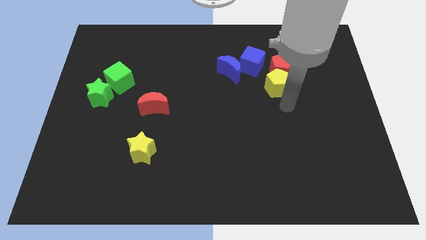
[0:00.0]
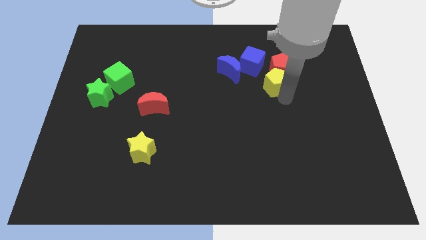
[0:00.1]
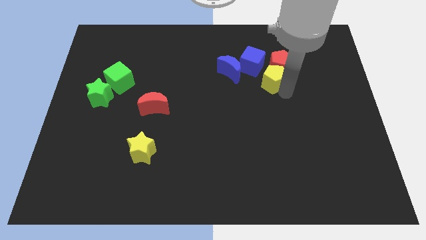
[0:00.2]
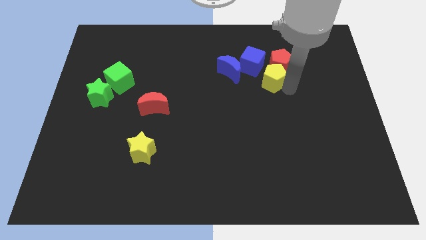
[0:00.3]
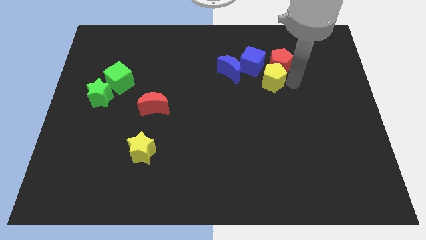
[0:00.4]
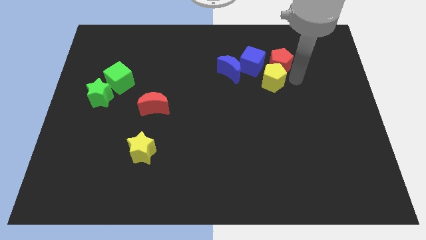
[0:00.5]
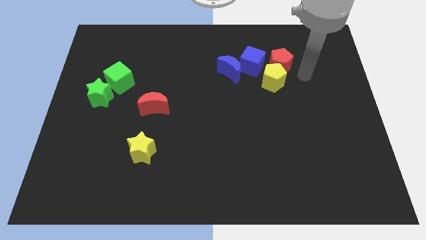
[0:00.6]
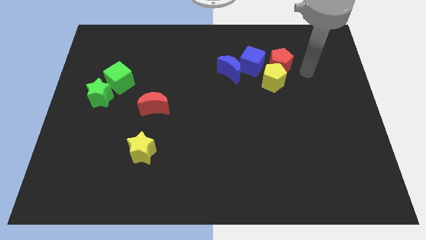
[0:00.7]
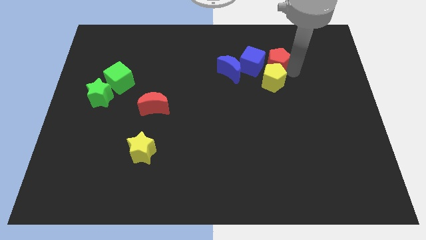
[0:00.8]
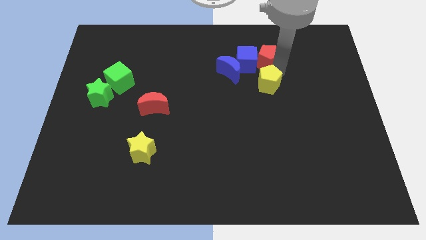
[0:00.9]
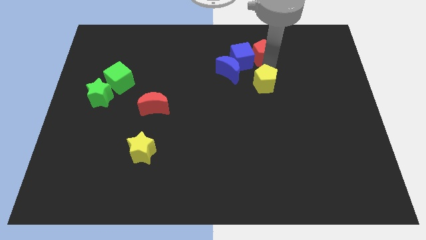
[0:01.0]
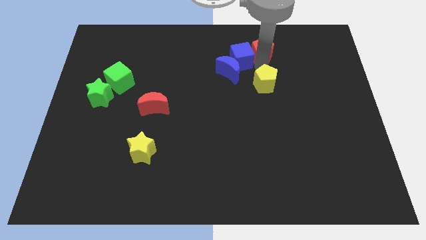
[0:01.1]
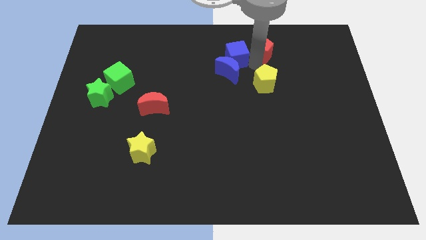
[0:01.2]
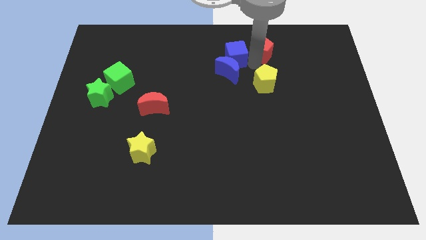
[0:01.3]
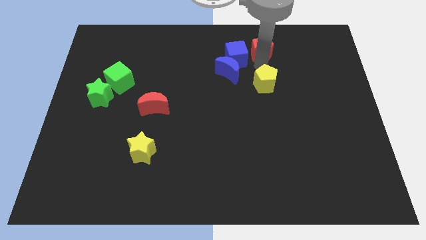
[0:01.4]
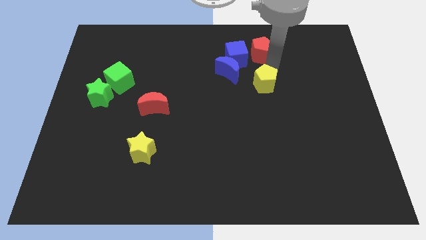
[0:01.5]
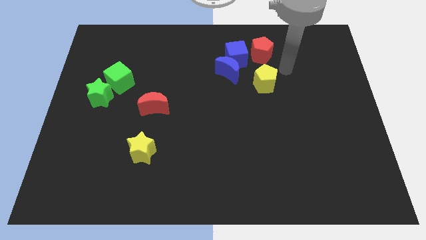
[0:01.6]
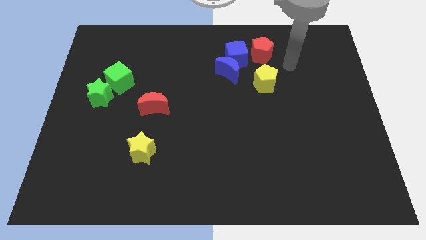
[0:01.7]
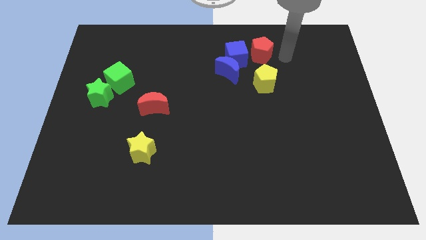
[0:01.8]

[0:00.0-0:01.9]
separate the red pentagon and blue cube

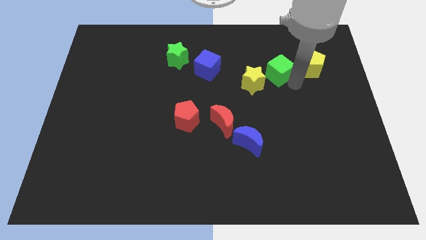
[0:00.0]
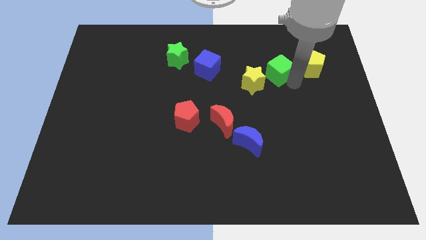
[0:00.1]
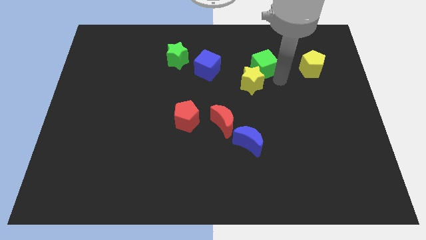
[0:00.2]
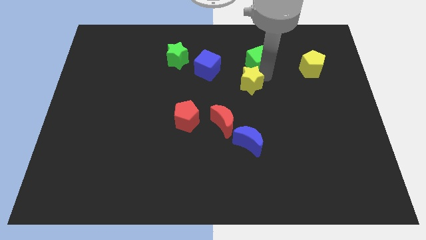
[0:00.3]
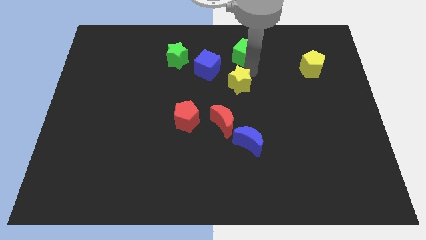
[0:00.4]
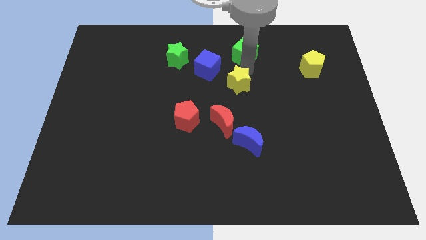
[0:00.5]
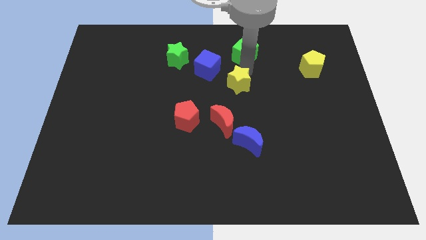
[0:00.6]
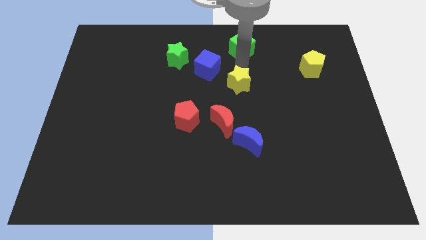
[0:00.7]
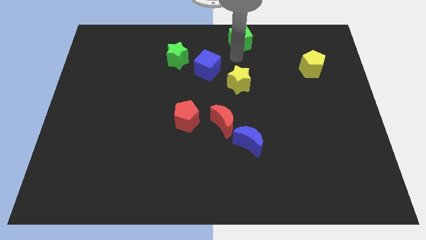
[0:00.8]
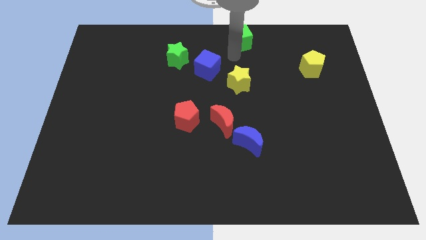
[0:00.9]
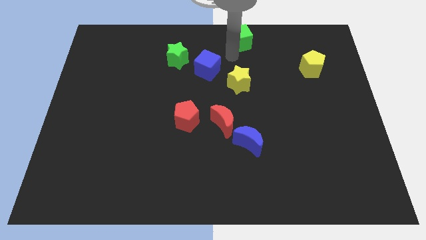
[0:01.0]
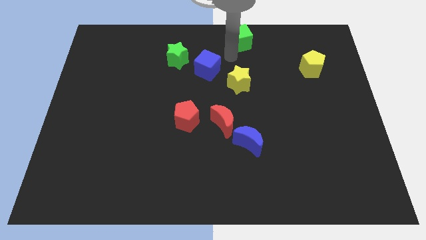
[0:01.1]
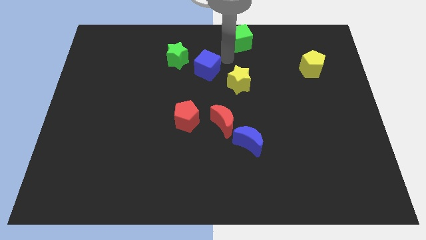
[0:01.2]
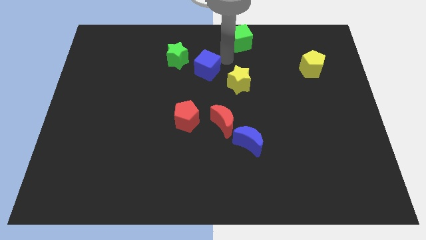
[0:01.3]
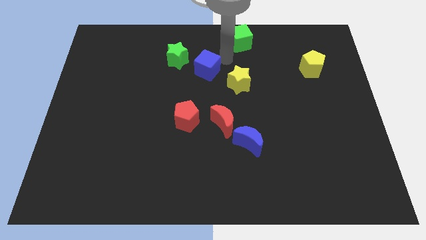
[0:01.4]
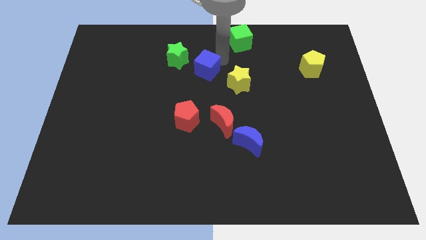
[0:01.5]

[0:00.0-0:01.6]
separate green cube towards top center of the board

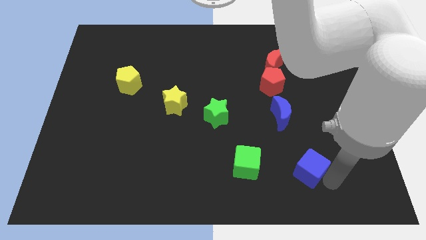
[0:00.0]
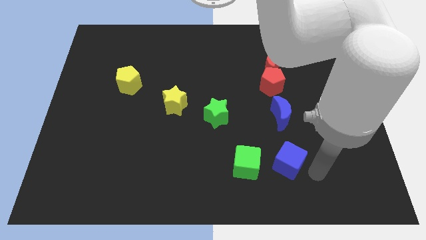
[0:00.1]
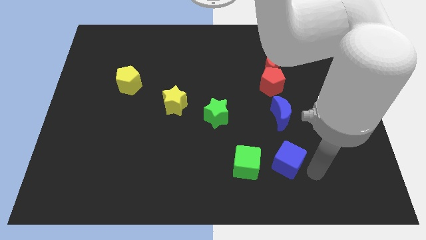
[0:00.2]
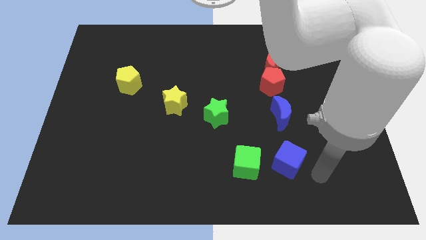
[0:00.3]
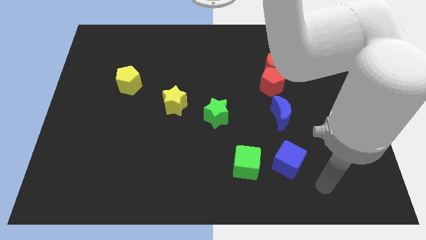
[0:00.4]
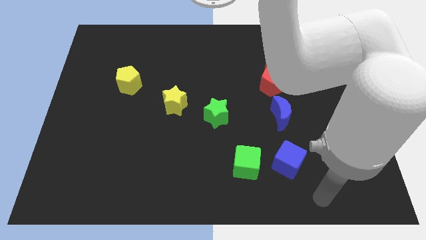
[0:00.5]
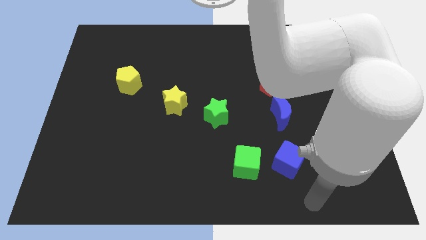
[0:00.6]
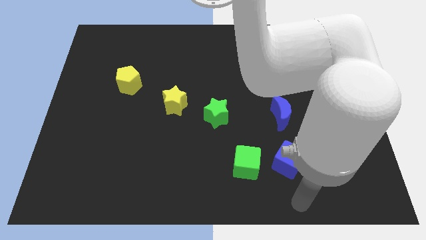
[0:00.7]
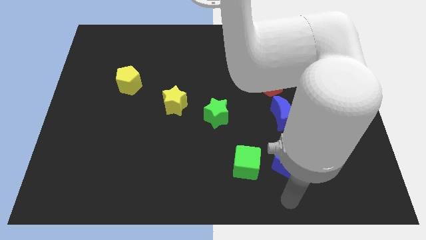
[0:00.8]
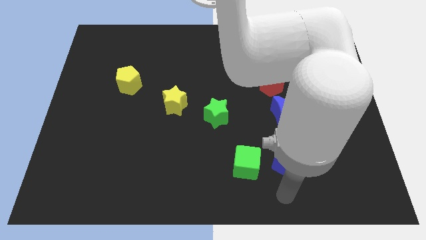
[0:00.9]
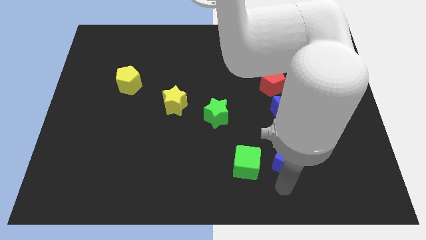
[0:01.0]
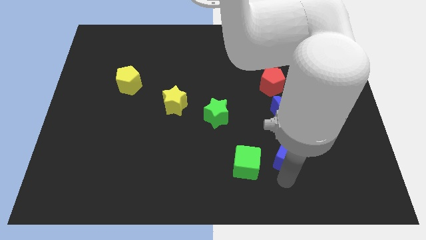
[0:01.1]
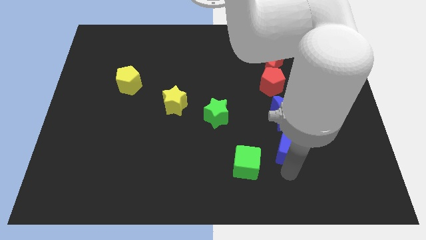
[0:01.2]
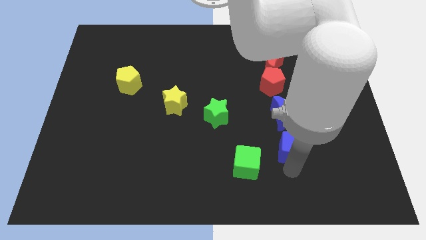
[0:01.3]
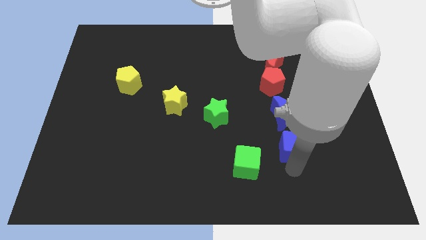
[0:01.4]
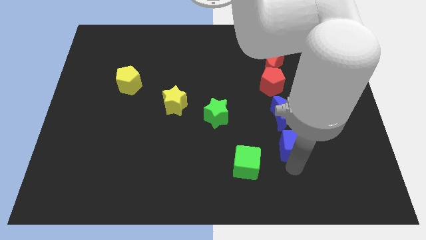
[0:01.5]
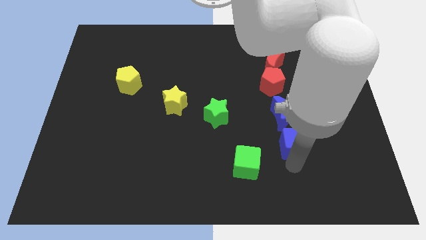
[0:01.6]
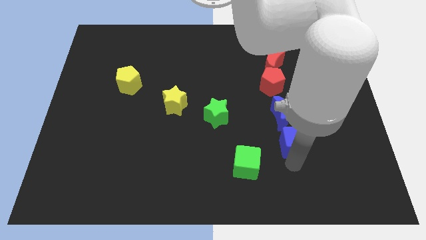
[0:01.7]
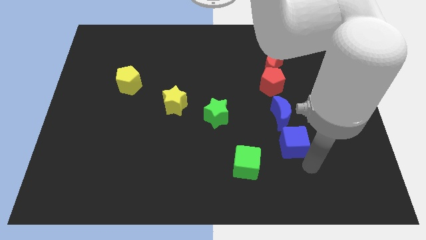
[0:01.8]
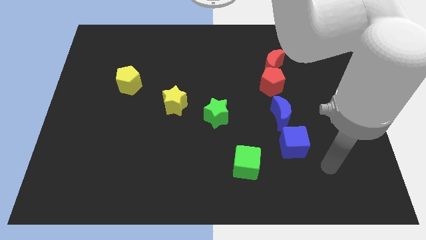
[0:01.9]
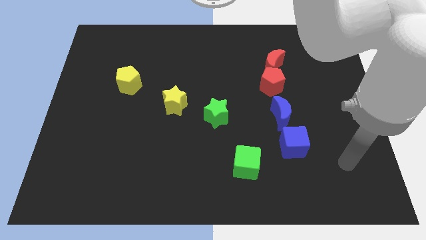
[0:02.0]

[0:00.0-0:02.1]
move the blue cube to the bottom of the blue moon

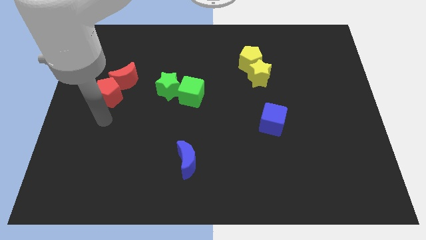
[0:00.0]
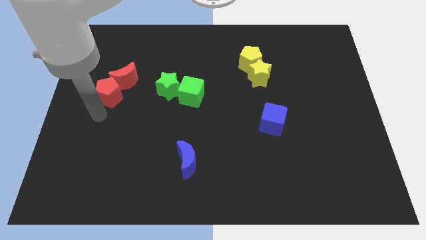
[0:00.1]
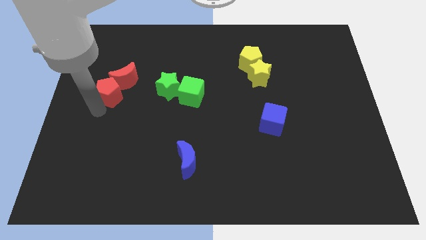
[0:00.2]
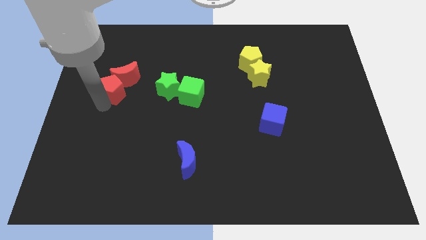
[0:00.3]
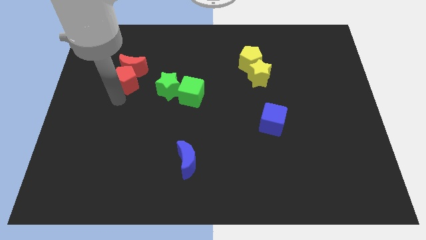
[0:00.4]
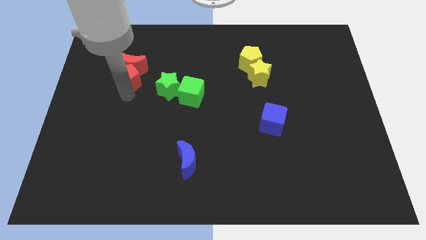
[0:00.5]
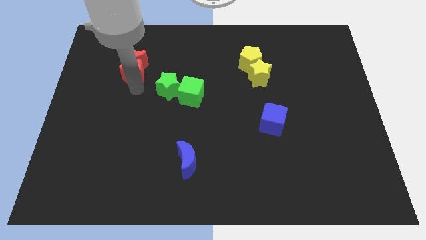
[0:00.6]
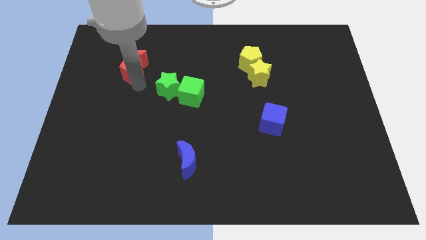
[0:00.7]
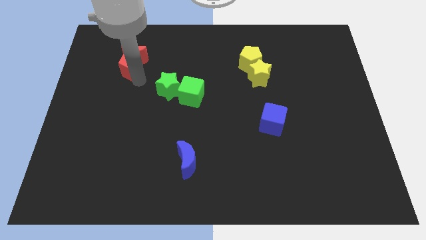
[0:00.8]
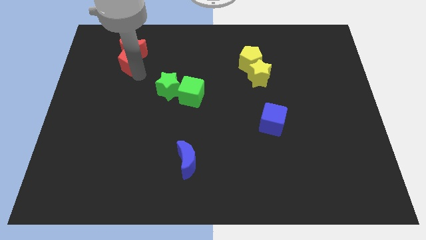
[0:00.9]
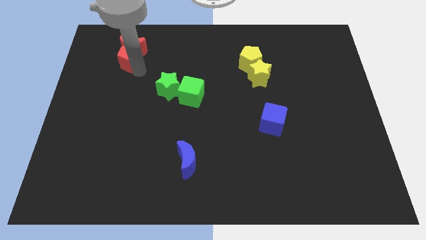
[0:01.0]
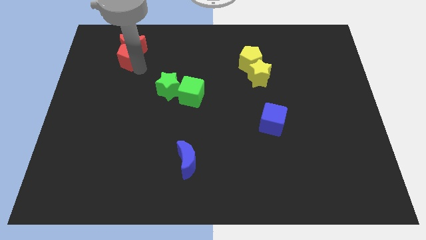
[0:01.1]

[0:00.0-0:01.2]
move the red blocks towards the top

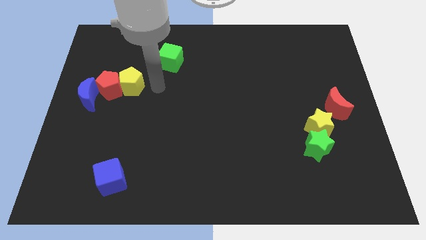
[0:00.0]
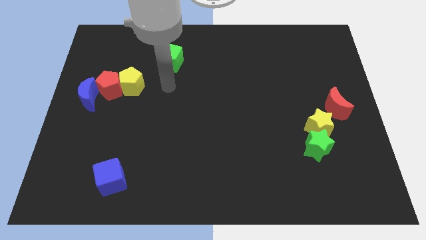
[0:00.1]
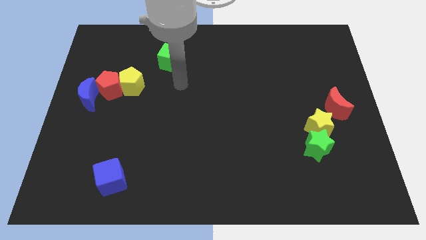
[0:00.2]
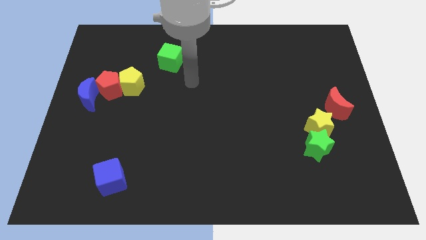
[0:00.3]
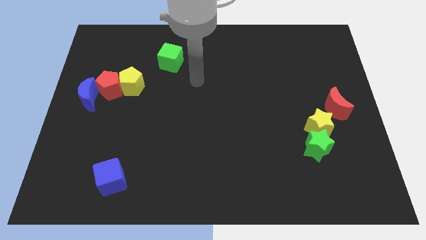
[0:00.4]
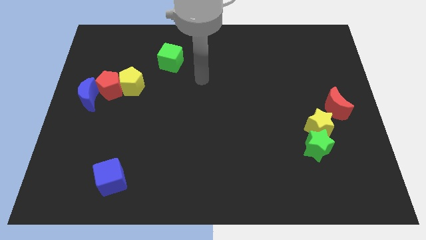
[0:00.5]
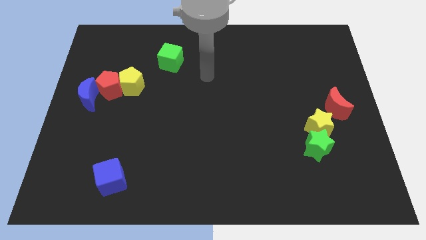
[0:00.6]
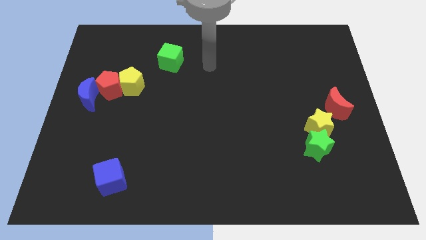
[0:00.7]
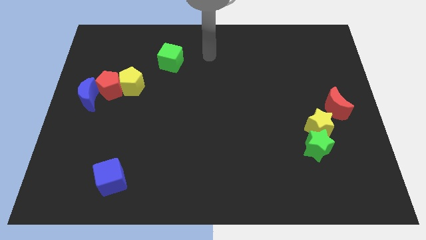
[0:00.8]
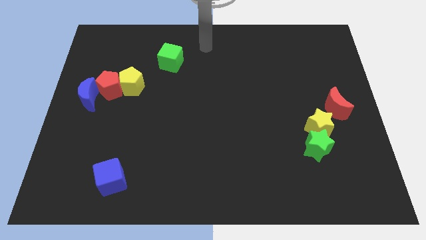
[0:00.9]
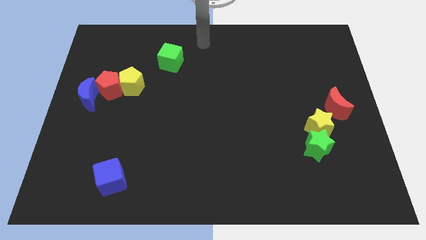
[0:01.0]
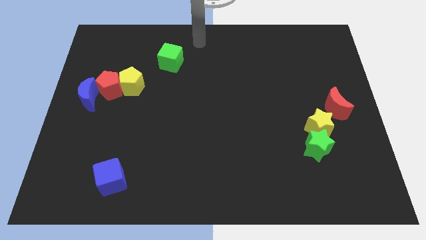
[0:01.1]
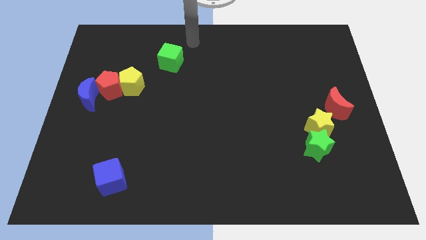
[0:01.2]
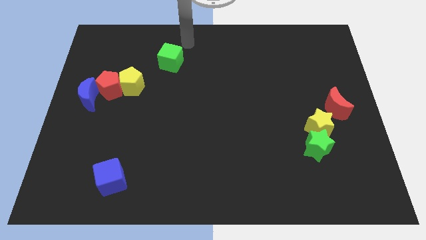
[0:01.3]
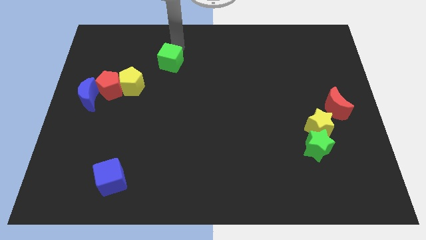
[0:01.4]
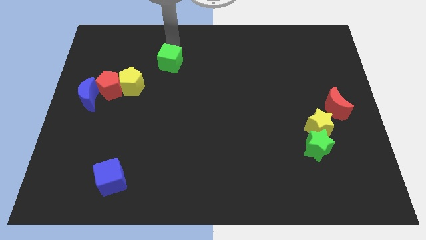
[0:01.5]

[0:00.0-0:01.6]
touch the top side of the green cube

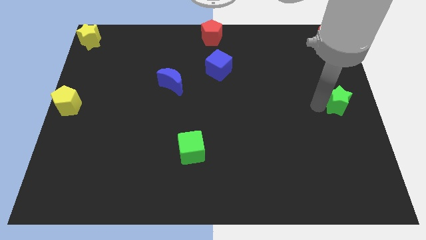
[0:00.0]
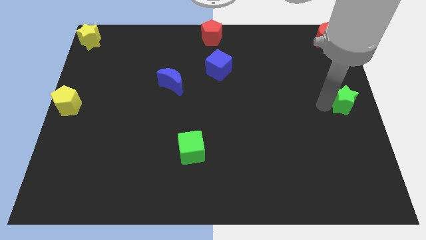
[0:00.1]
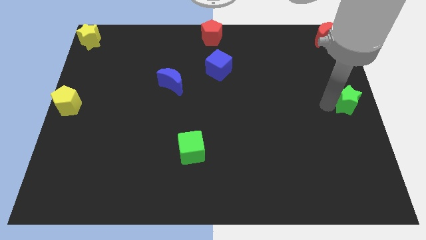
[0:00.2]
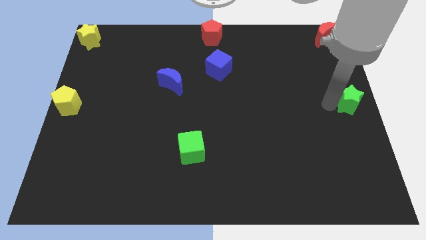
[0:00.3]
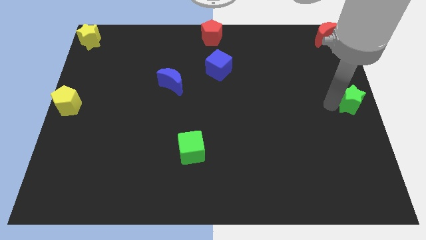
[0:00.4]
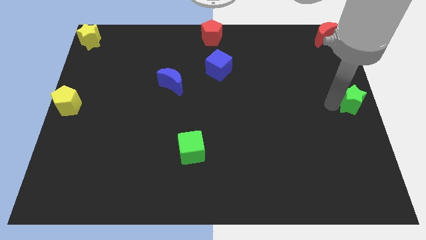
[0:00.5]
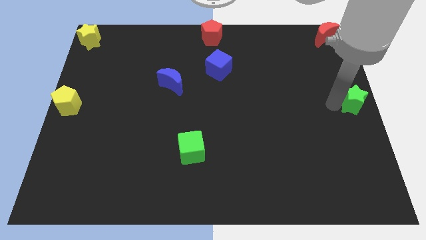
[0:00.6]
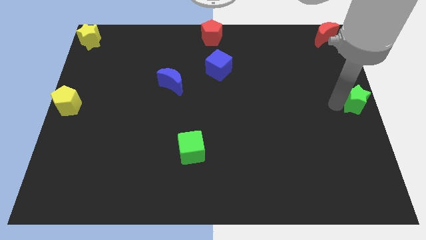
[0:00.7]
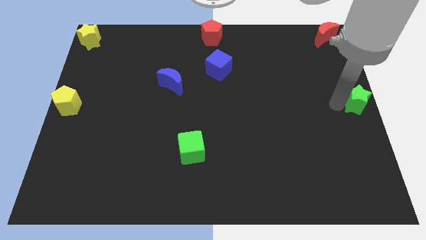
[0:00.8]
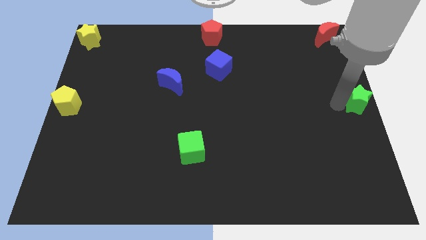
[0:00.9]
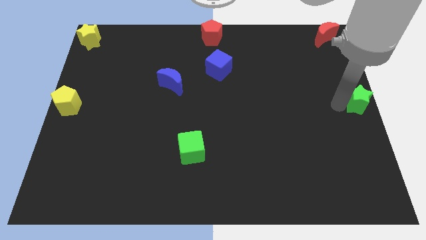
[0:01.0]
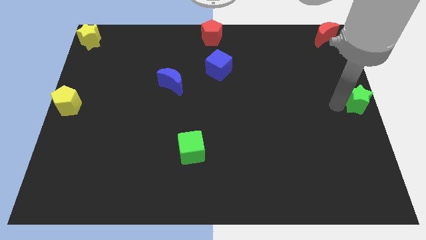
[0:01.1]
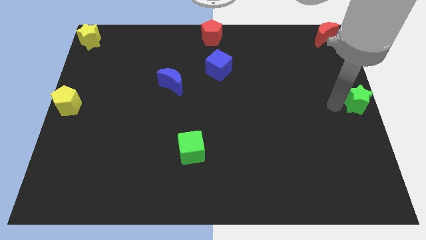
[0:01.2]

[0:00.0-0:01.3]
move the green star to the right middle of the board
